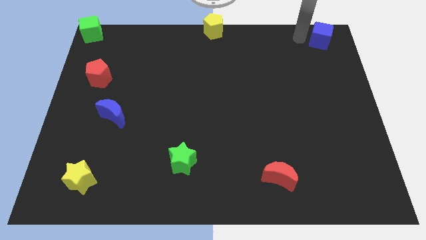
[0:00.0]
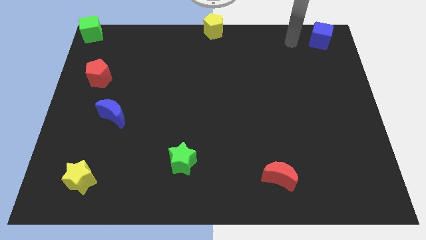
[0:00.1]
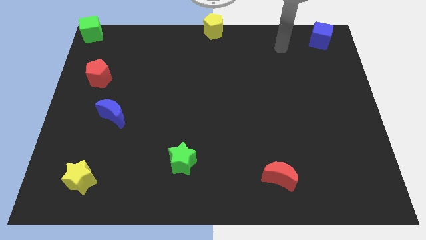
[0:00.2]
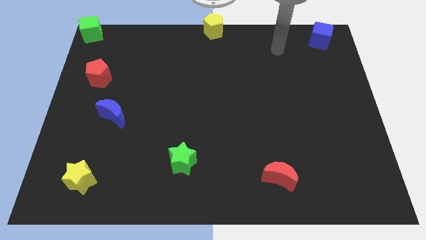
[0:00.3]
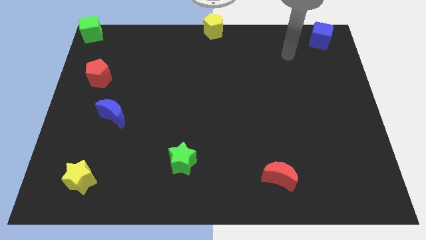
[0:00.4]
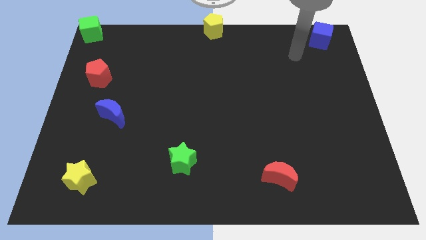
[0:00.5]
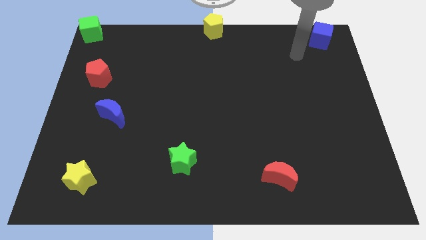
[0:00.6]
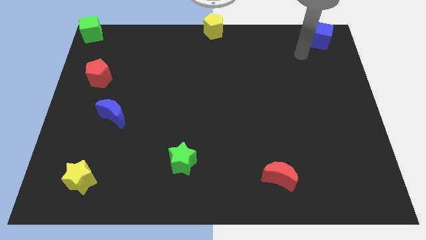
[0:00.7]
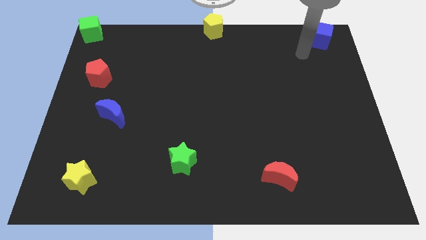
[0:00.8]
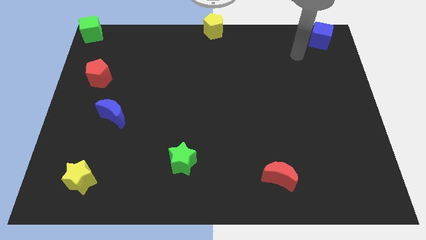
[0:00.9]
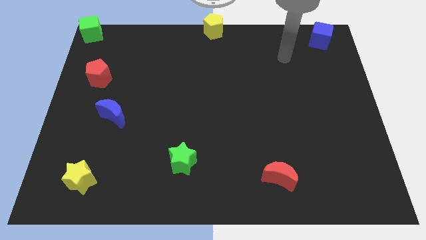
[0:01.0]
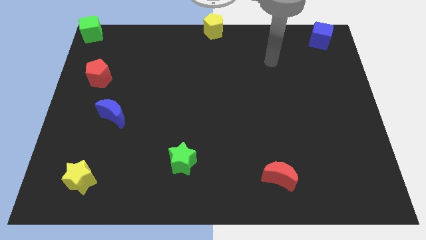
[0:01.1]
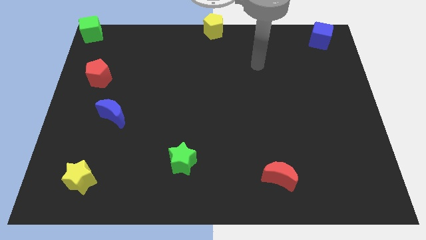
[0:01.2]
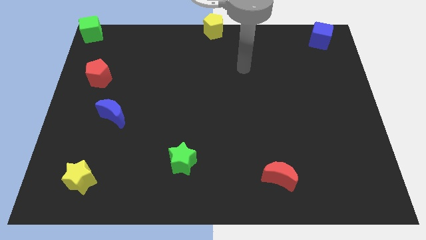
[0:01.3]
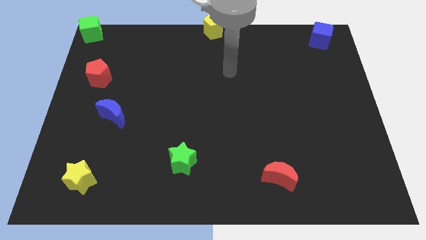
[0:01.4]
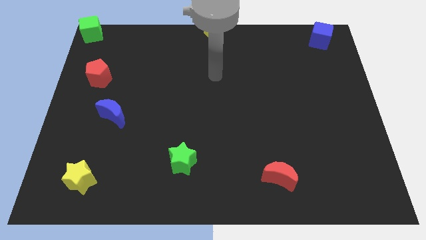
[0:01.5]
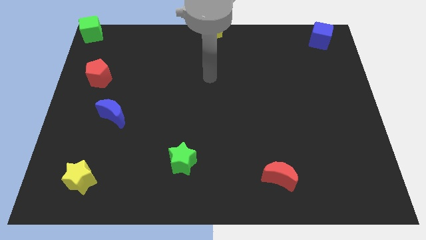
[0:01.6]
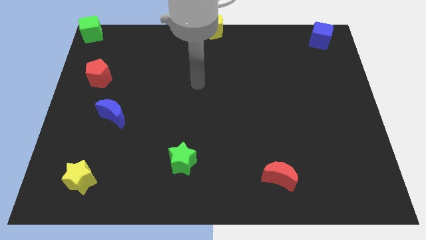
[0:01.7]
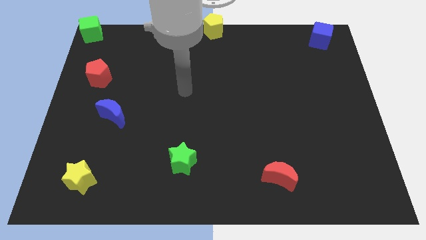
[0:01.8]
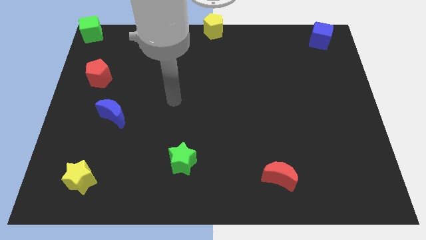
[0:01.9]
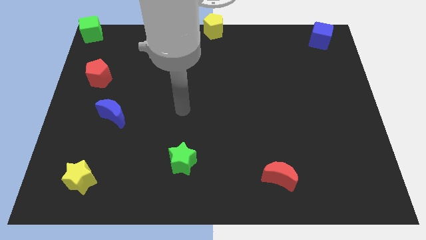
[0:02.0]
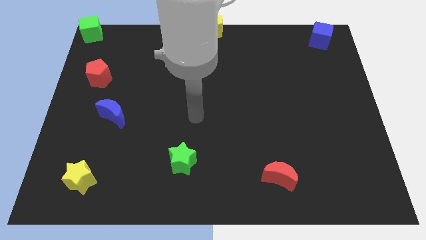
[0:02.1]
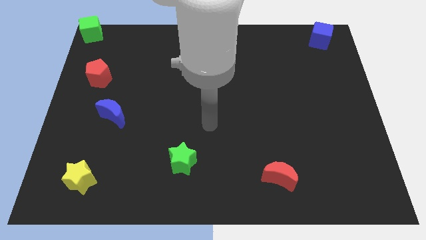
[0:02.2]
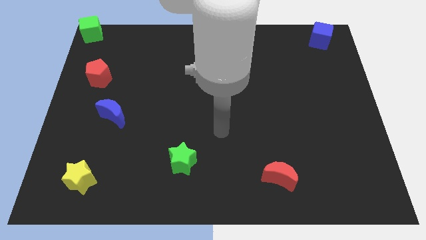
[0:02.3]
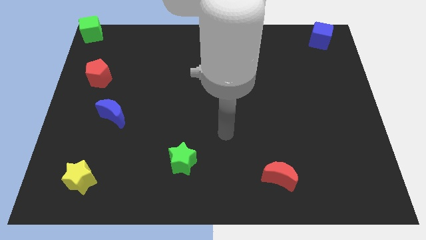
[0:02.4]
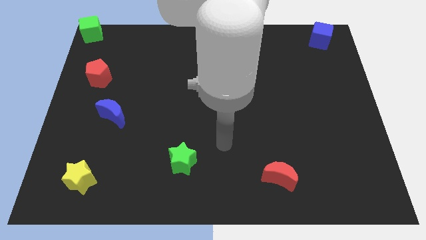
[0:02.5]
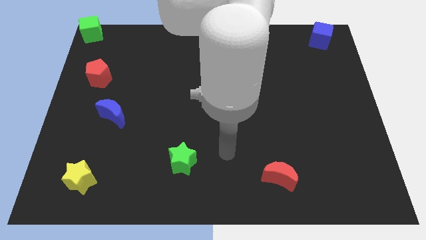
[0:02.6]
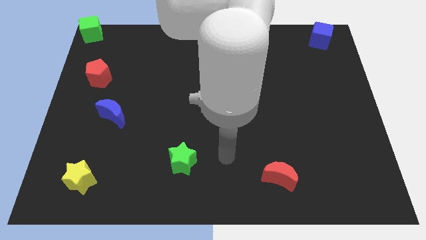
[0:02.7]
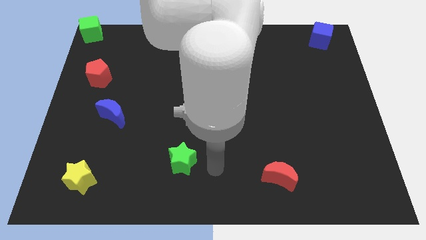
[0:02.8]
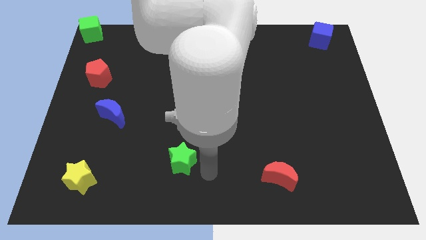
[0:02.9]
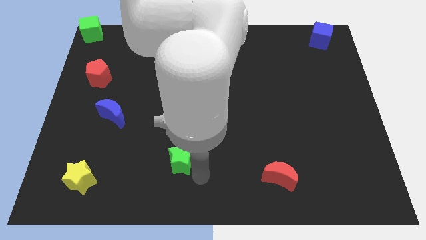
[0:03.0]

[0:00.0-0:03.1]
move the arm towards the bottom center of the board

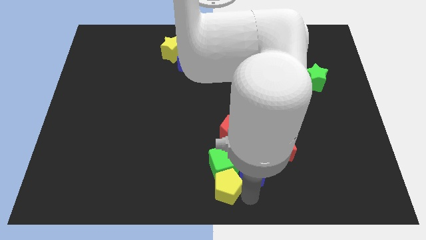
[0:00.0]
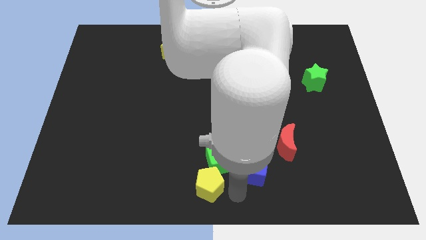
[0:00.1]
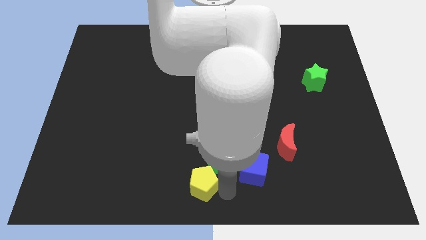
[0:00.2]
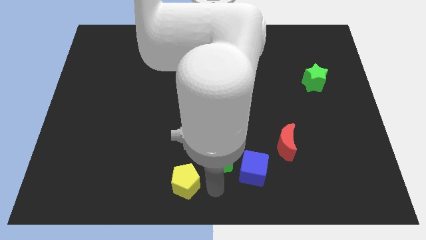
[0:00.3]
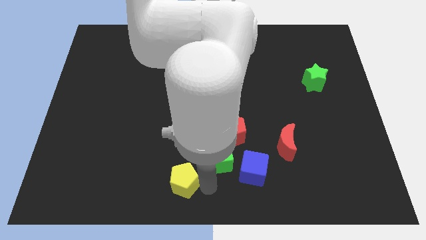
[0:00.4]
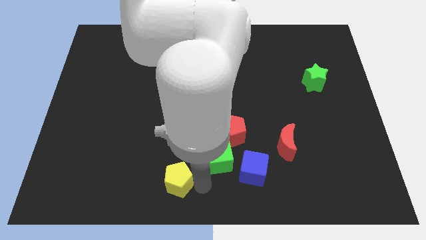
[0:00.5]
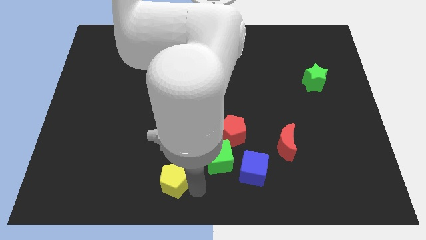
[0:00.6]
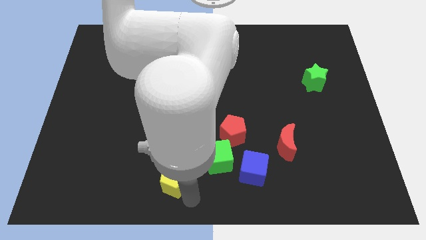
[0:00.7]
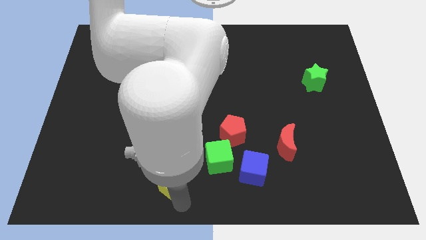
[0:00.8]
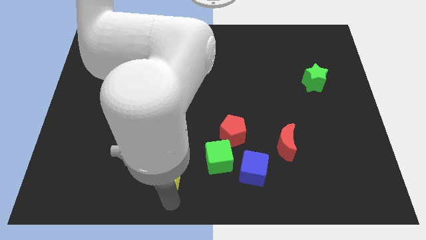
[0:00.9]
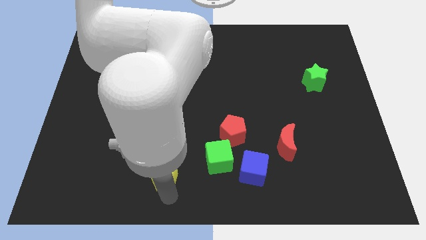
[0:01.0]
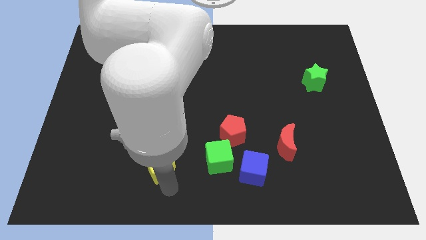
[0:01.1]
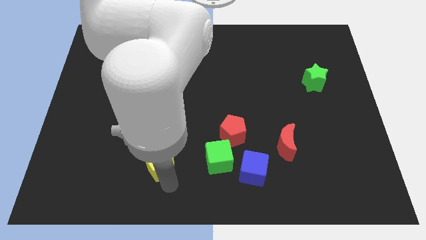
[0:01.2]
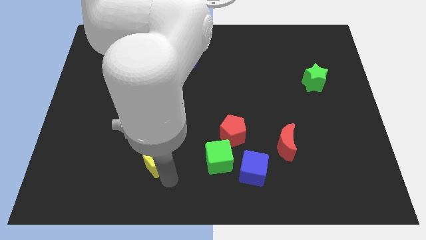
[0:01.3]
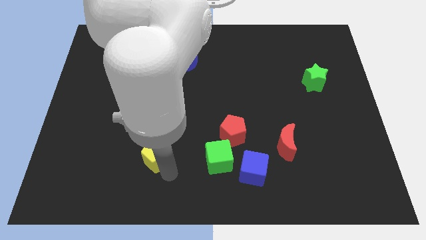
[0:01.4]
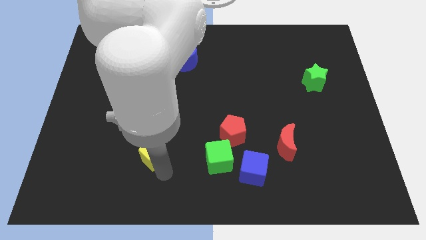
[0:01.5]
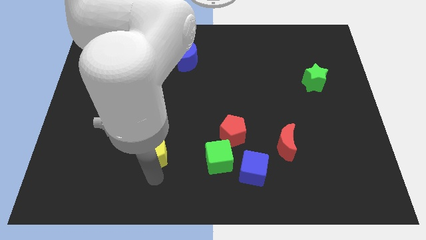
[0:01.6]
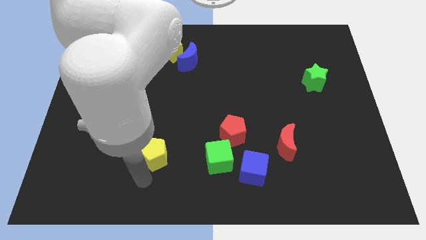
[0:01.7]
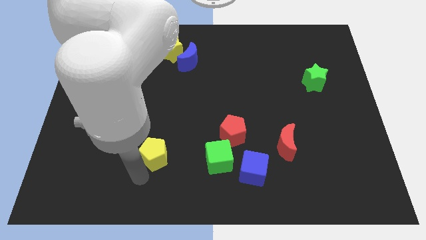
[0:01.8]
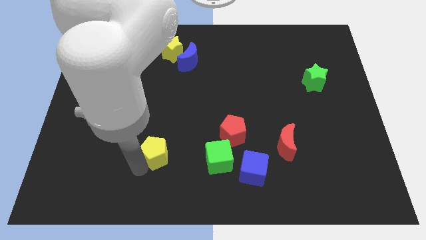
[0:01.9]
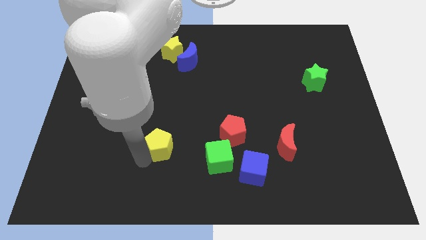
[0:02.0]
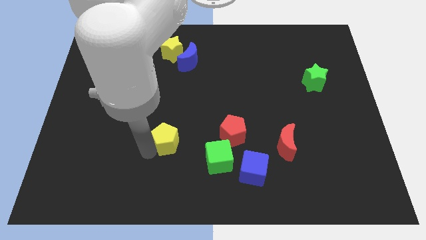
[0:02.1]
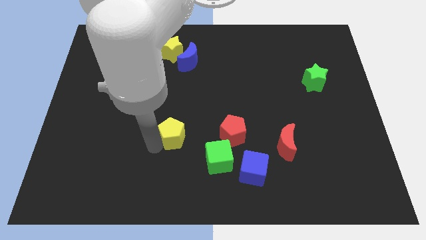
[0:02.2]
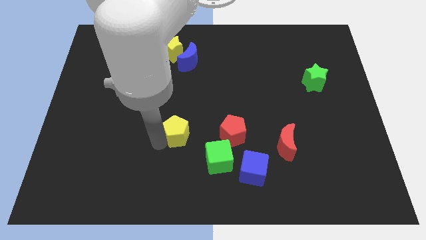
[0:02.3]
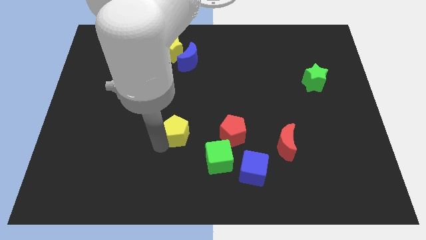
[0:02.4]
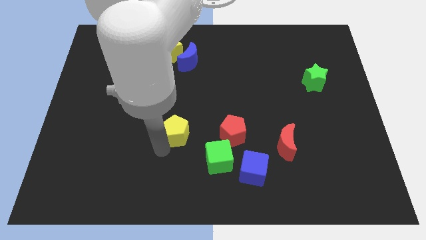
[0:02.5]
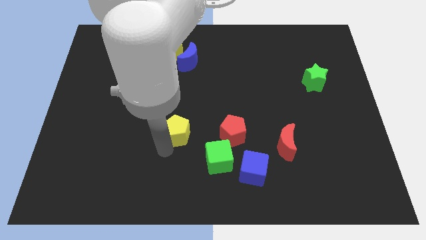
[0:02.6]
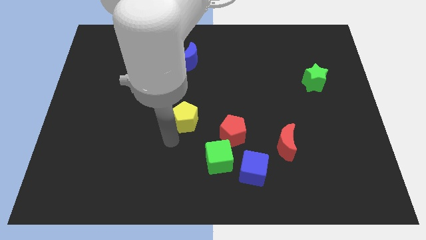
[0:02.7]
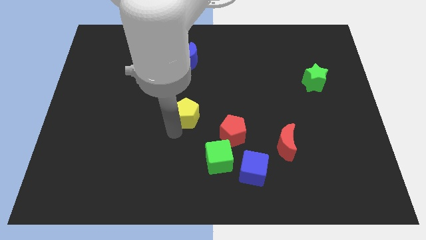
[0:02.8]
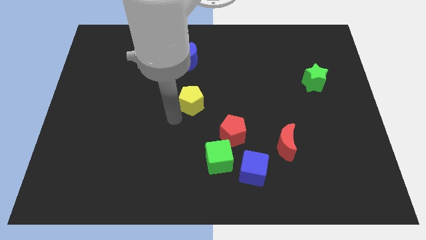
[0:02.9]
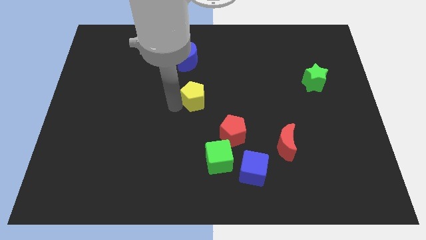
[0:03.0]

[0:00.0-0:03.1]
separate yellow pentagon from green cube

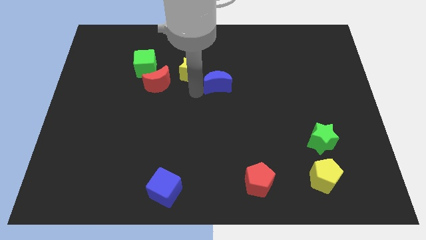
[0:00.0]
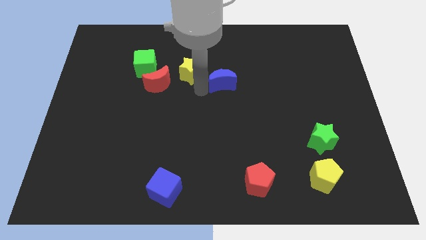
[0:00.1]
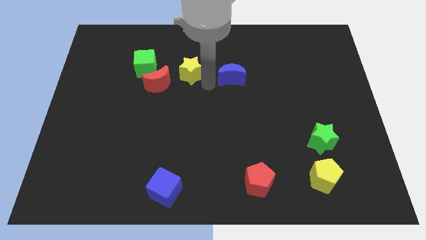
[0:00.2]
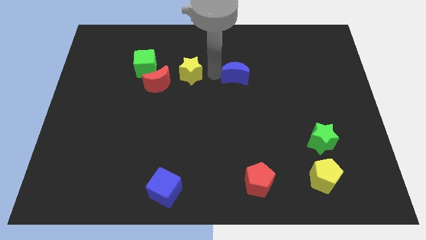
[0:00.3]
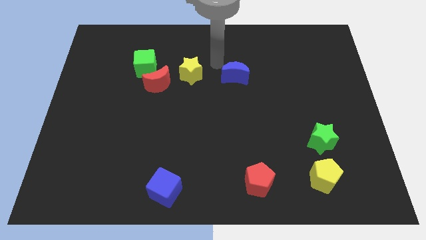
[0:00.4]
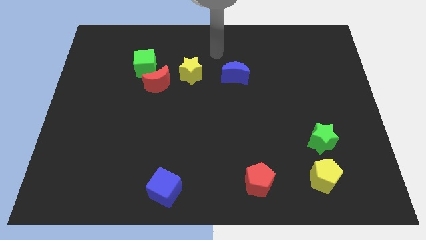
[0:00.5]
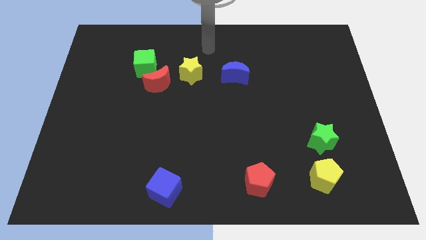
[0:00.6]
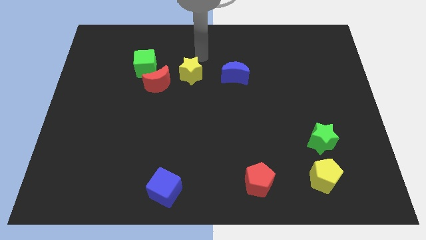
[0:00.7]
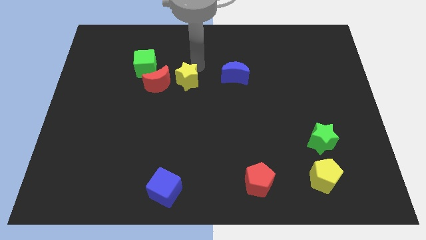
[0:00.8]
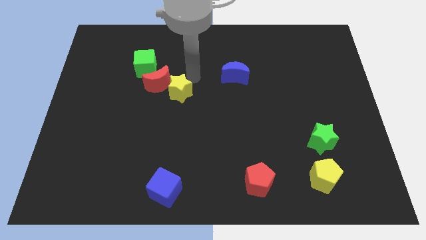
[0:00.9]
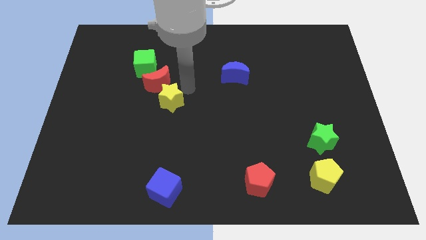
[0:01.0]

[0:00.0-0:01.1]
move the blue moon right to the bottom of the yellow star

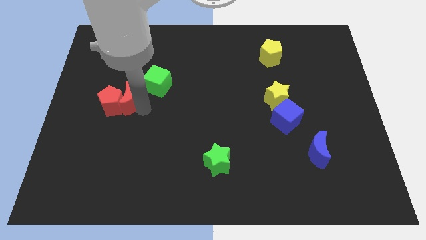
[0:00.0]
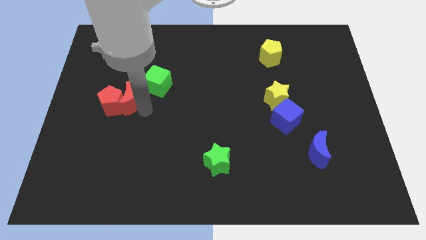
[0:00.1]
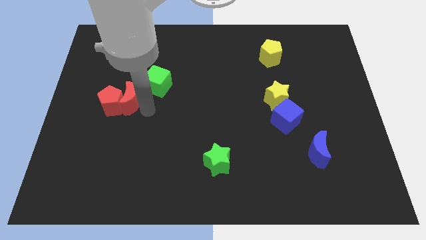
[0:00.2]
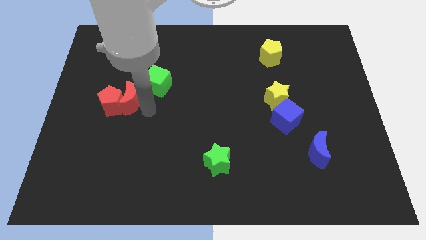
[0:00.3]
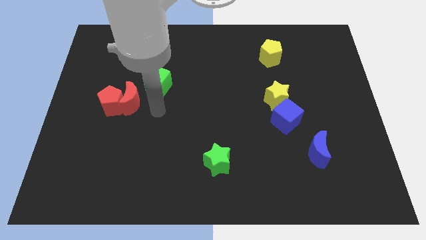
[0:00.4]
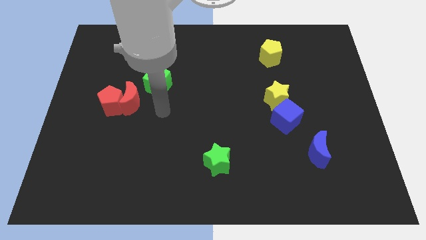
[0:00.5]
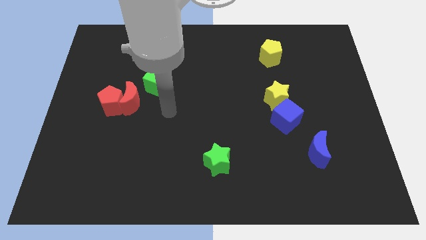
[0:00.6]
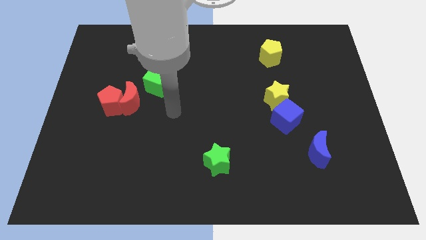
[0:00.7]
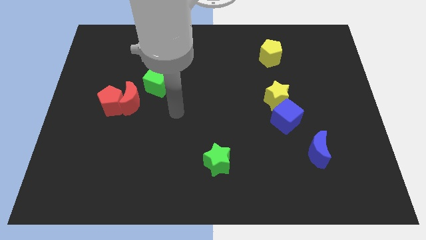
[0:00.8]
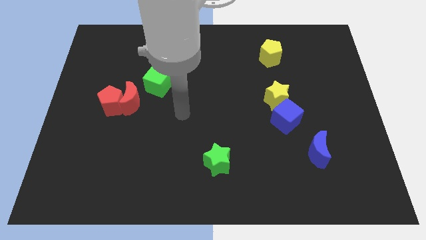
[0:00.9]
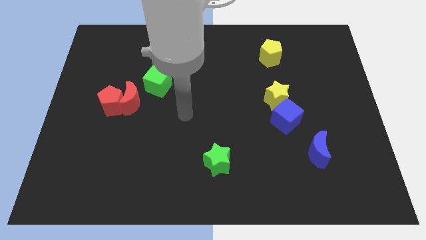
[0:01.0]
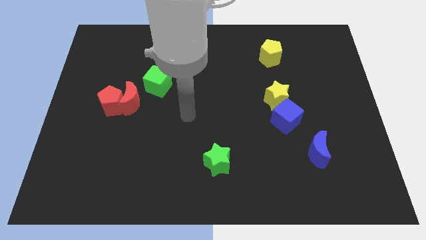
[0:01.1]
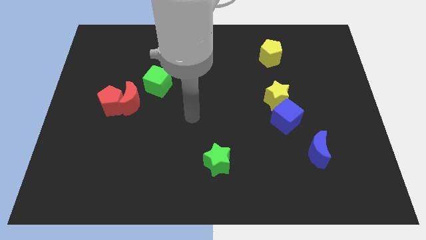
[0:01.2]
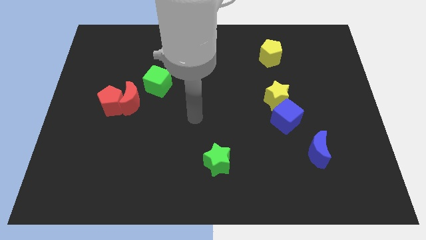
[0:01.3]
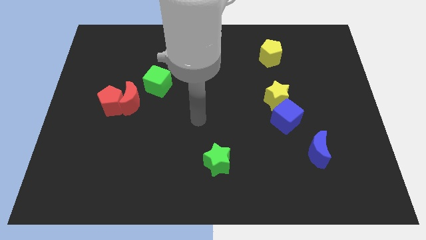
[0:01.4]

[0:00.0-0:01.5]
go away from the right side of the red moon

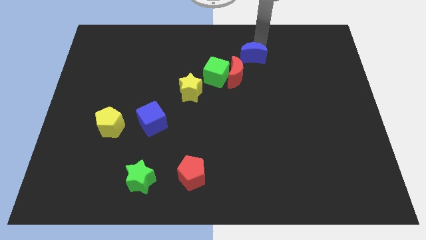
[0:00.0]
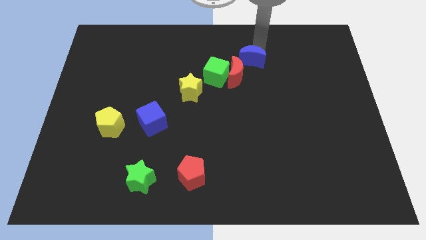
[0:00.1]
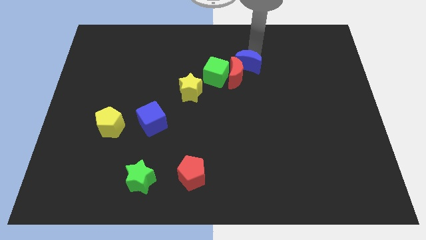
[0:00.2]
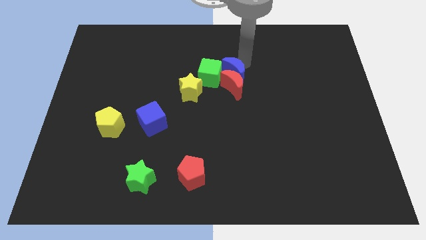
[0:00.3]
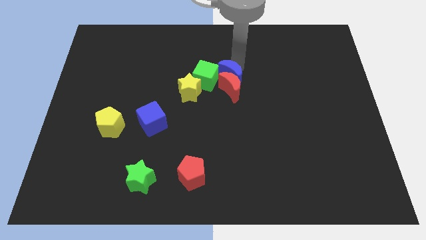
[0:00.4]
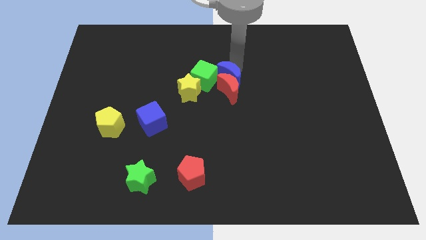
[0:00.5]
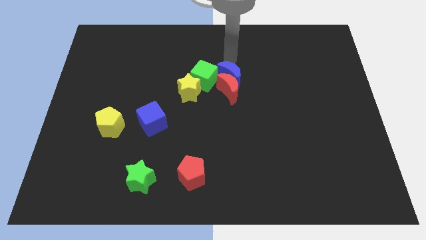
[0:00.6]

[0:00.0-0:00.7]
move the blue cube into the group of blocks
